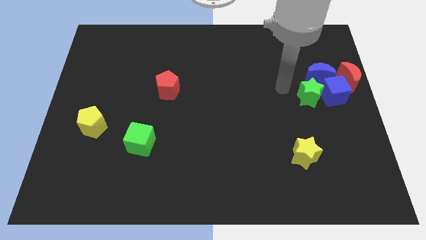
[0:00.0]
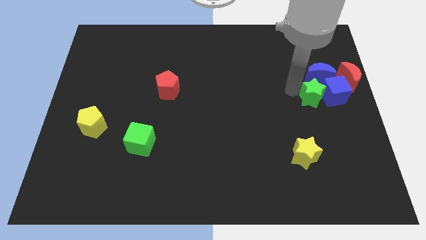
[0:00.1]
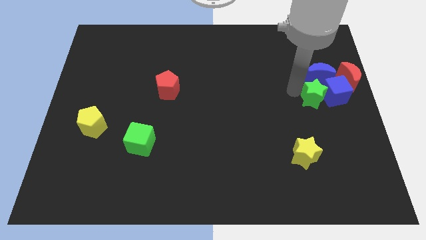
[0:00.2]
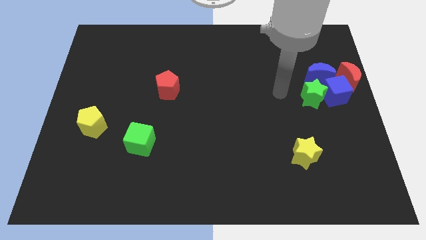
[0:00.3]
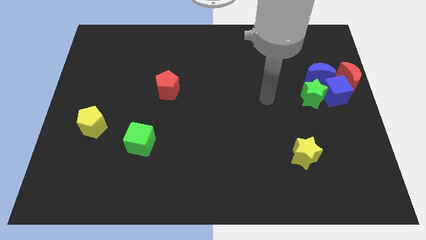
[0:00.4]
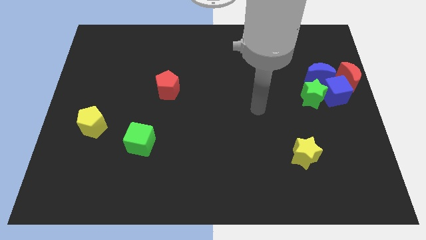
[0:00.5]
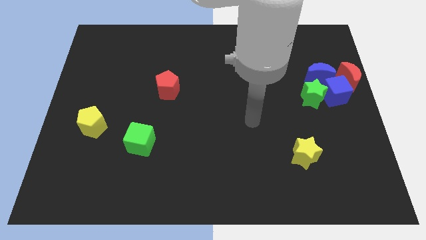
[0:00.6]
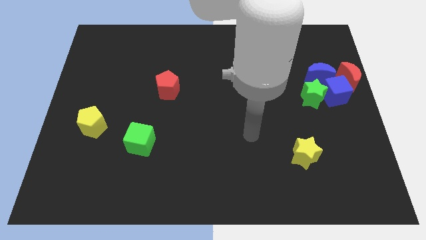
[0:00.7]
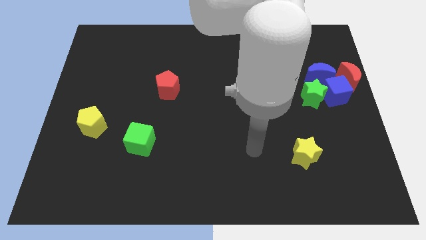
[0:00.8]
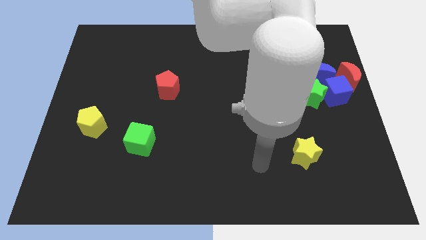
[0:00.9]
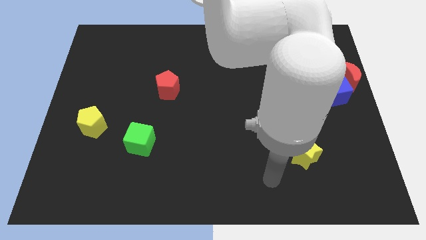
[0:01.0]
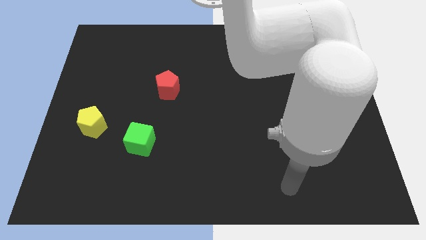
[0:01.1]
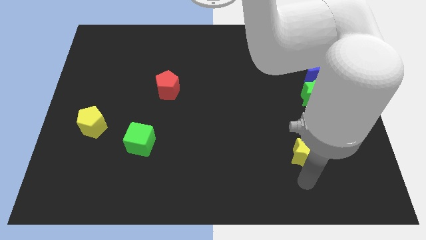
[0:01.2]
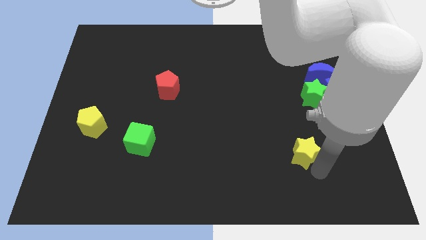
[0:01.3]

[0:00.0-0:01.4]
point your arm at the bottom of the yellow star

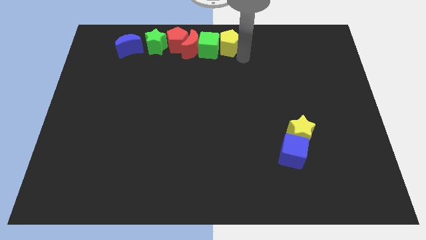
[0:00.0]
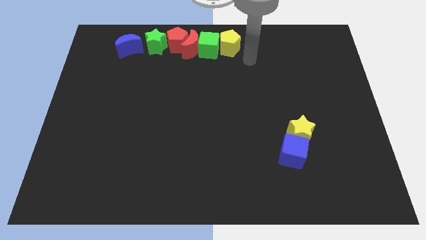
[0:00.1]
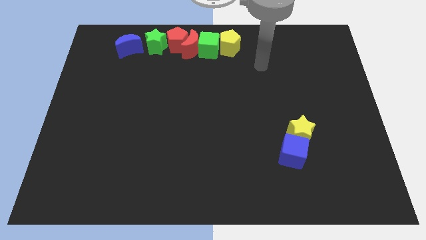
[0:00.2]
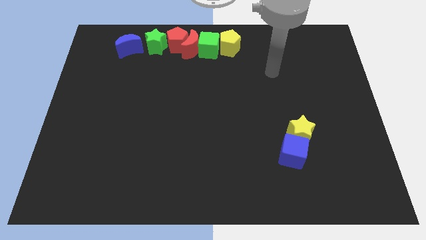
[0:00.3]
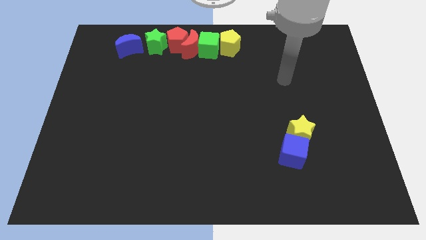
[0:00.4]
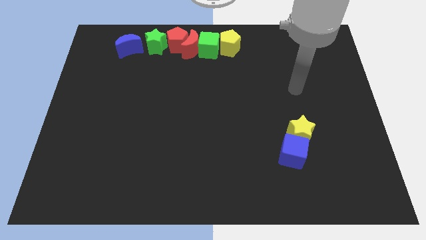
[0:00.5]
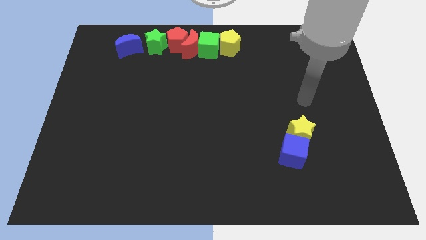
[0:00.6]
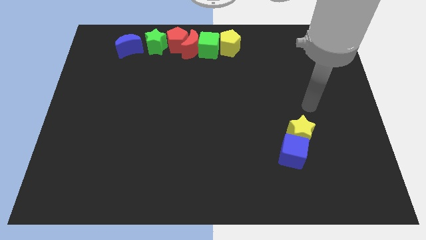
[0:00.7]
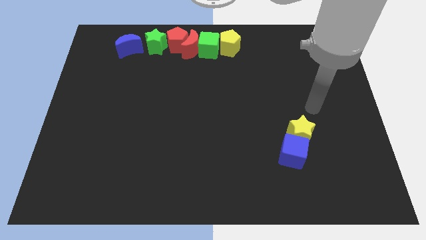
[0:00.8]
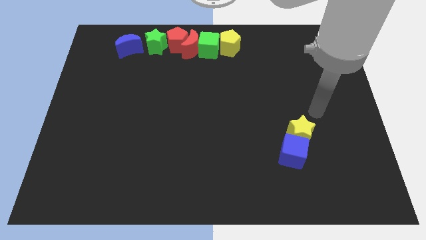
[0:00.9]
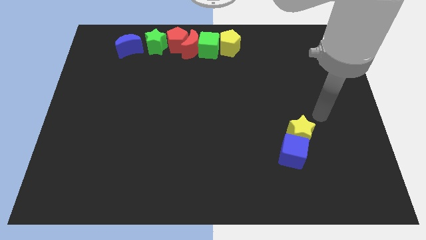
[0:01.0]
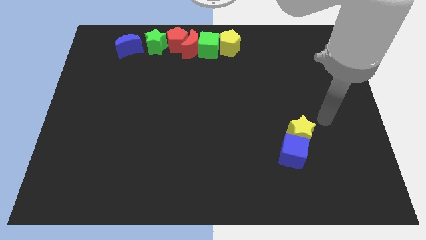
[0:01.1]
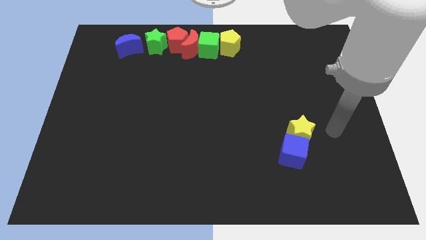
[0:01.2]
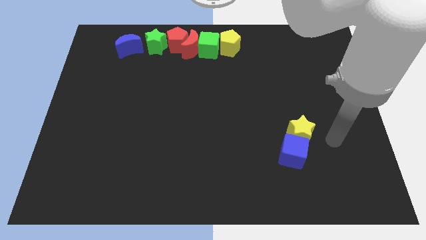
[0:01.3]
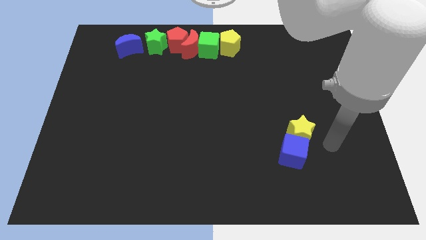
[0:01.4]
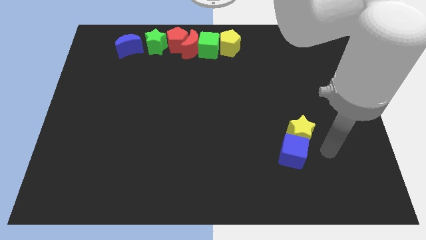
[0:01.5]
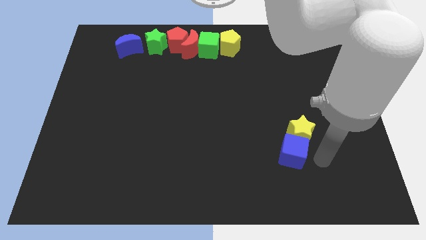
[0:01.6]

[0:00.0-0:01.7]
move your arm away from the yellow pentagaon

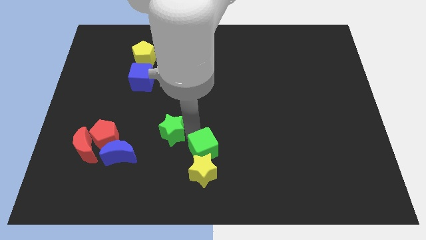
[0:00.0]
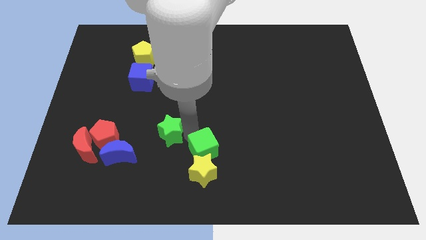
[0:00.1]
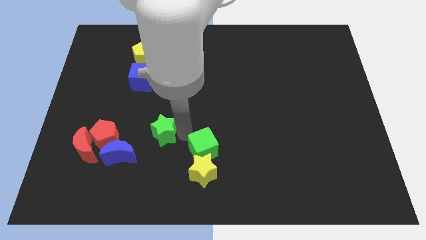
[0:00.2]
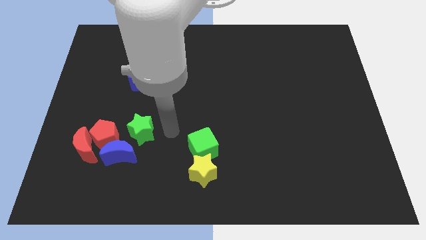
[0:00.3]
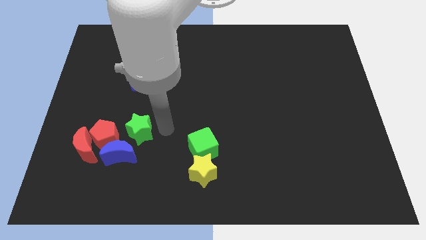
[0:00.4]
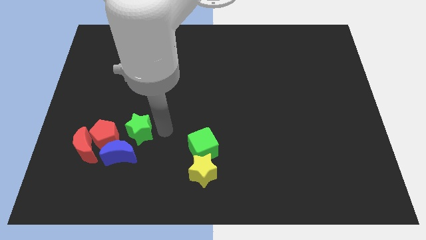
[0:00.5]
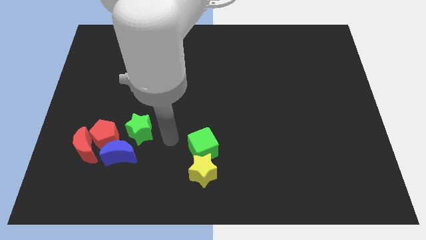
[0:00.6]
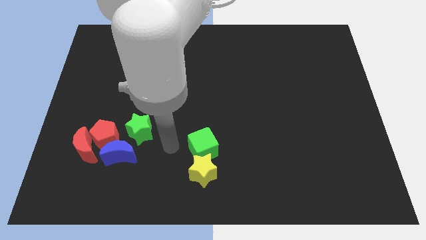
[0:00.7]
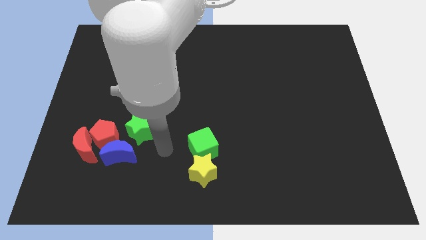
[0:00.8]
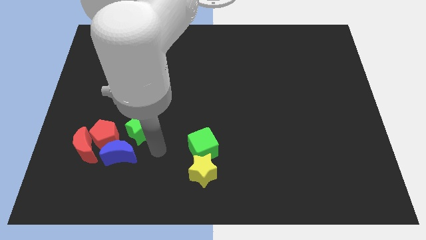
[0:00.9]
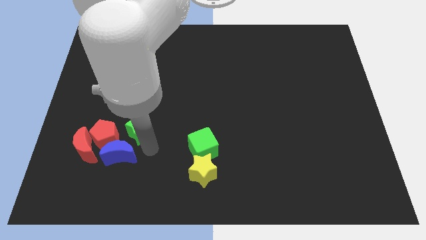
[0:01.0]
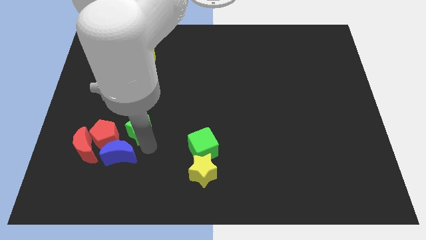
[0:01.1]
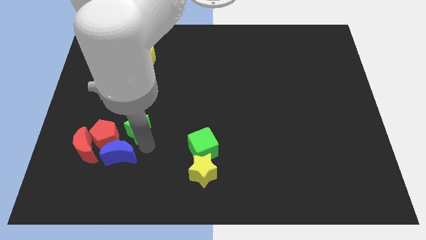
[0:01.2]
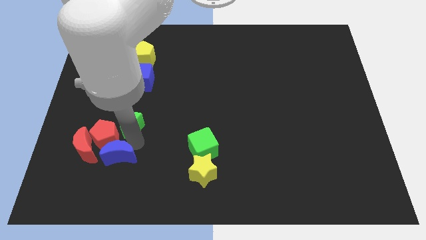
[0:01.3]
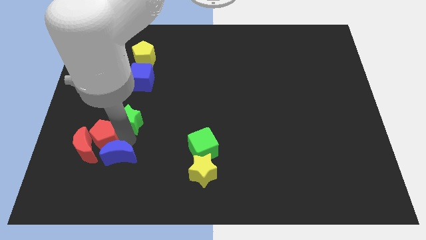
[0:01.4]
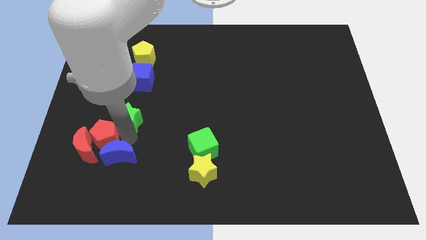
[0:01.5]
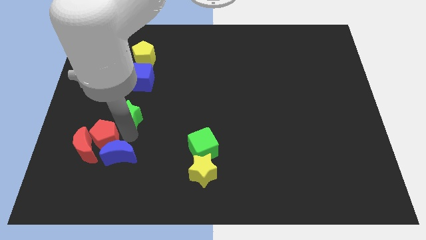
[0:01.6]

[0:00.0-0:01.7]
separate the green star from green cube

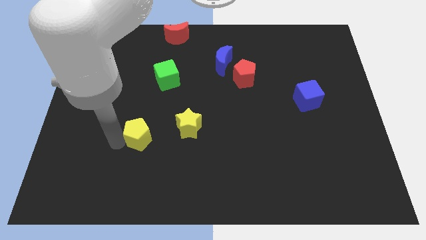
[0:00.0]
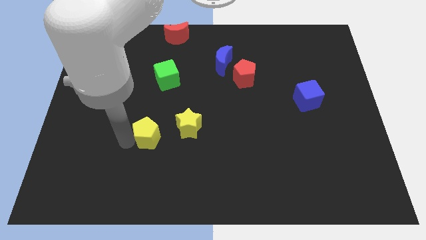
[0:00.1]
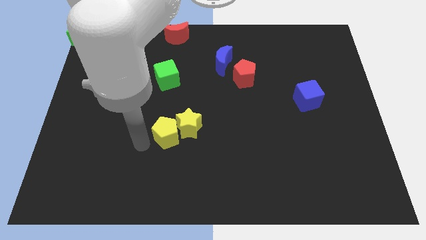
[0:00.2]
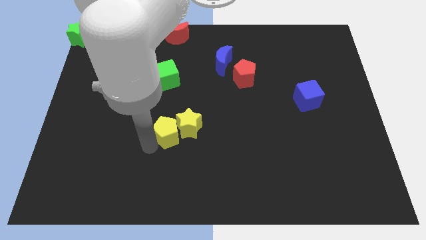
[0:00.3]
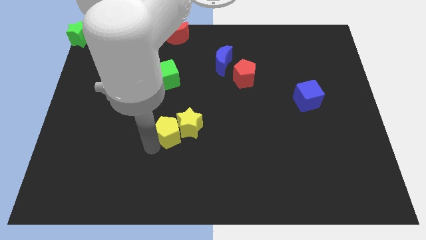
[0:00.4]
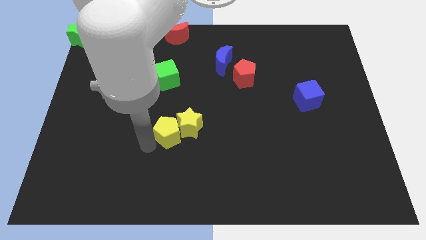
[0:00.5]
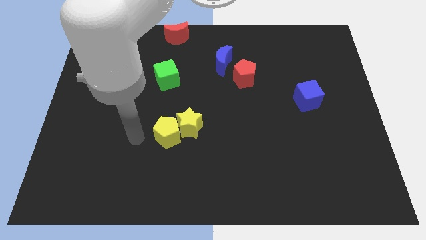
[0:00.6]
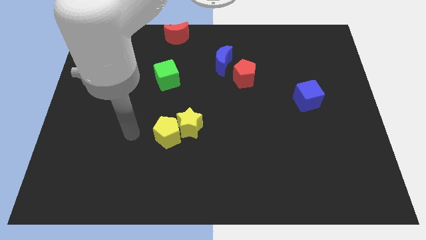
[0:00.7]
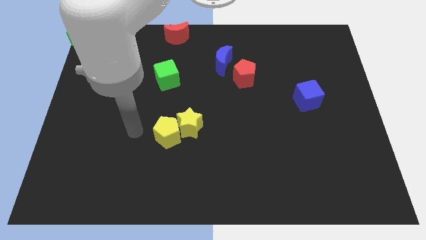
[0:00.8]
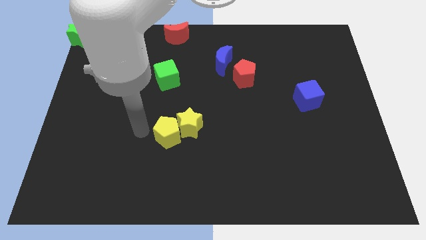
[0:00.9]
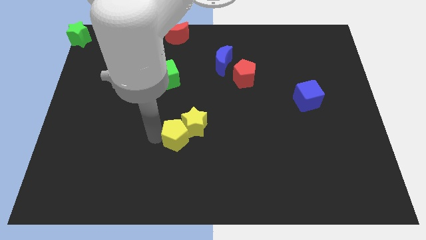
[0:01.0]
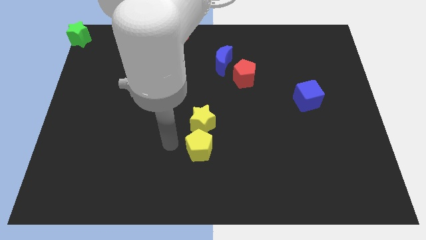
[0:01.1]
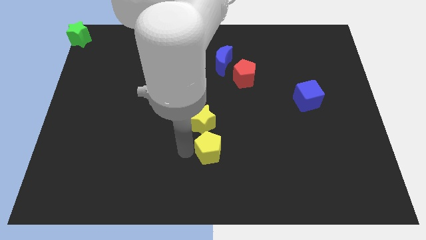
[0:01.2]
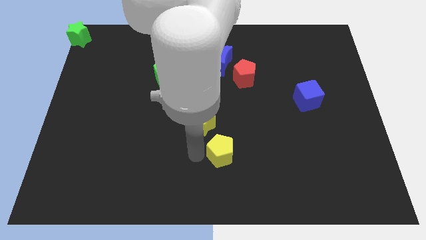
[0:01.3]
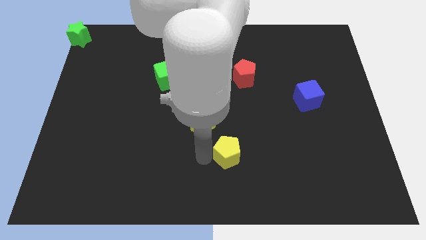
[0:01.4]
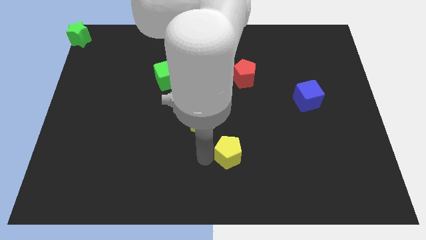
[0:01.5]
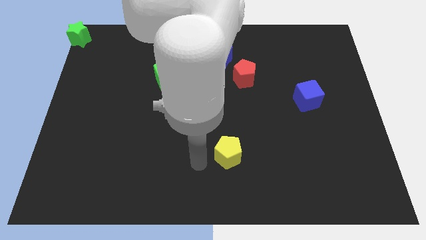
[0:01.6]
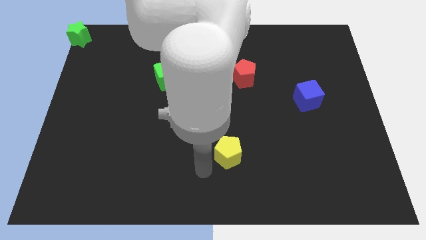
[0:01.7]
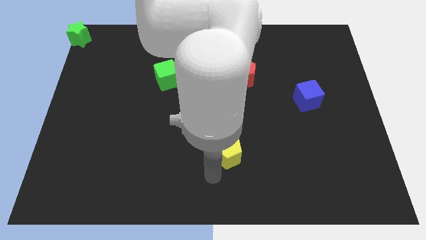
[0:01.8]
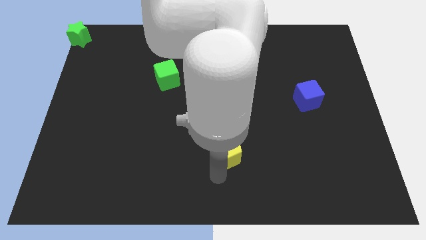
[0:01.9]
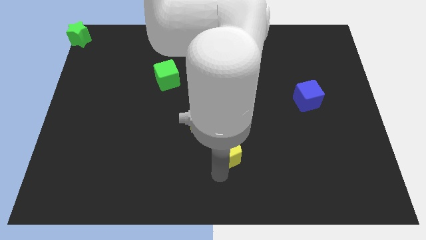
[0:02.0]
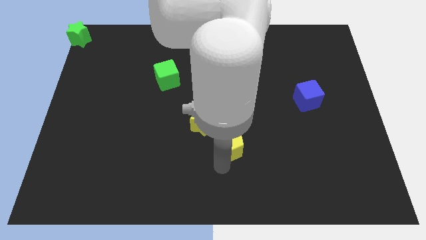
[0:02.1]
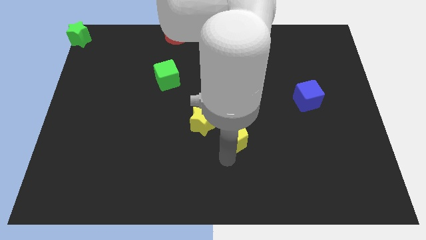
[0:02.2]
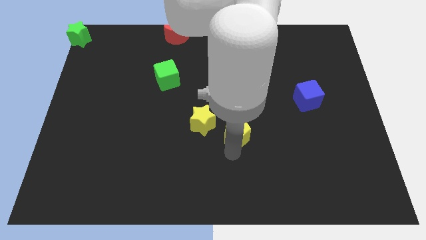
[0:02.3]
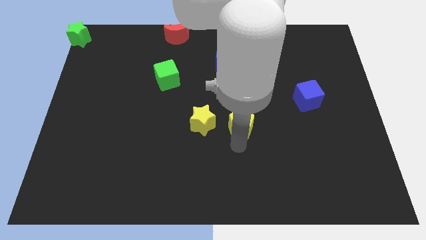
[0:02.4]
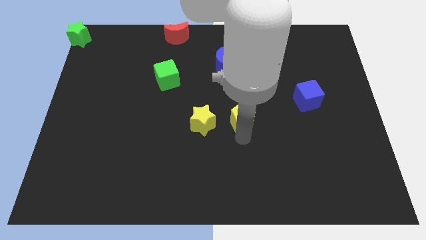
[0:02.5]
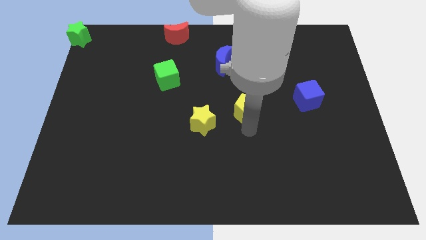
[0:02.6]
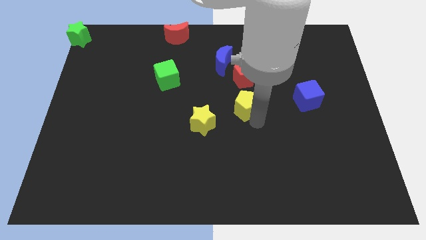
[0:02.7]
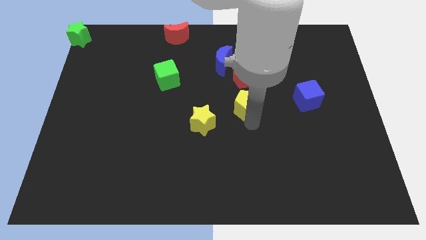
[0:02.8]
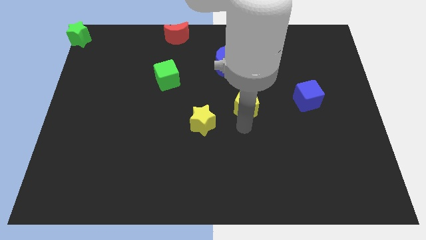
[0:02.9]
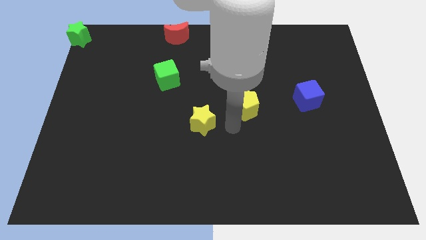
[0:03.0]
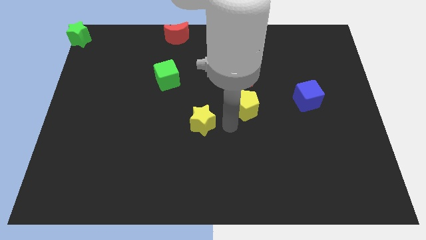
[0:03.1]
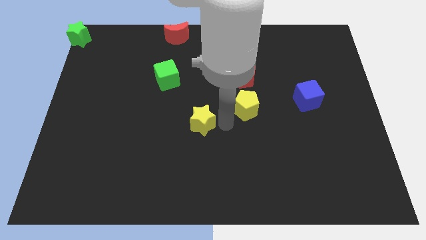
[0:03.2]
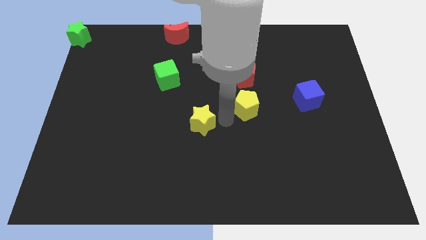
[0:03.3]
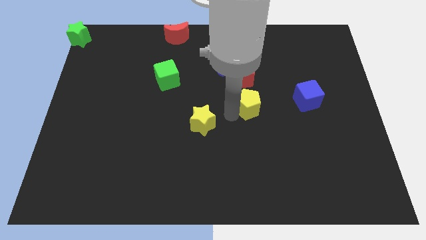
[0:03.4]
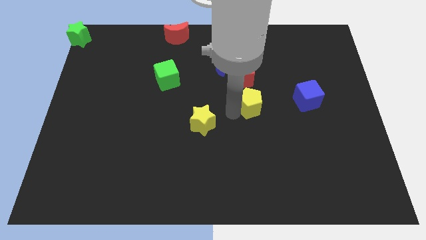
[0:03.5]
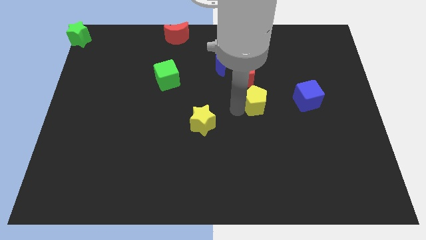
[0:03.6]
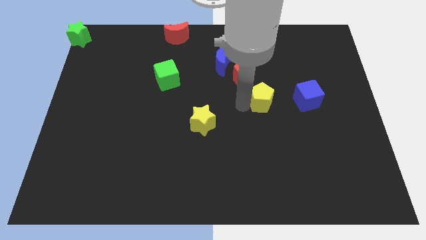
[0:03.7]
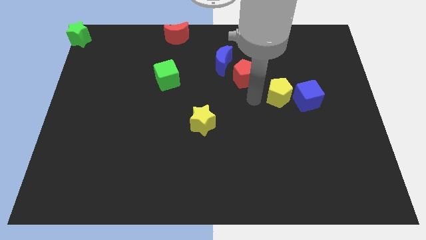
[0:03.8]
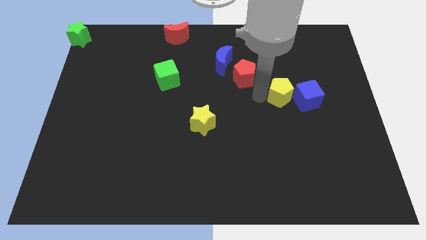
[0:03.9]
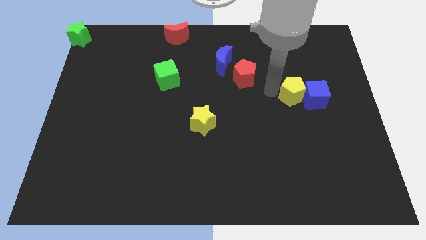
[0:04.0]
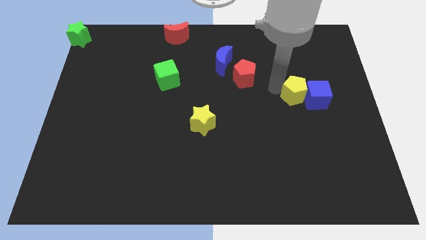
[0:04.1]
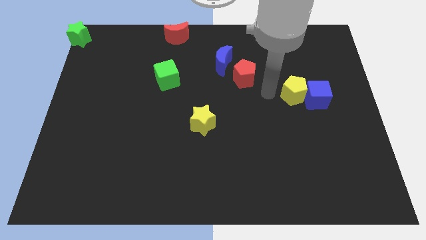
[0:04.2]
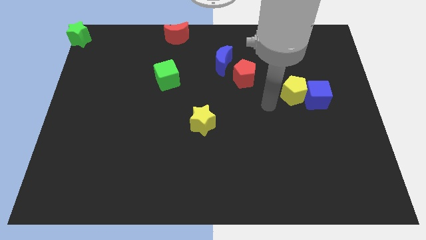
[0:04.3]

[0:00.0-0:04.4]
move yellow pentagon into the blue cube
